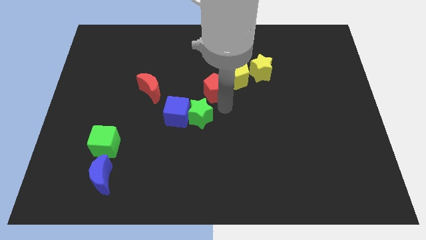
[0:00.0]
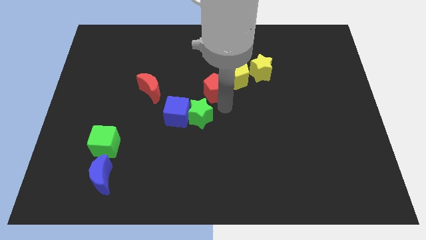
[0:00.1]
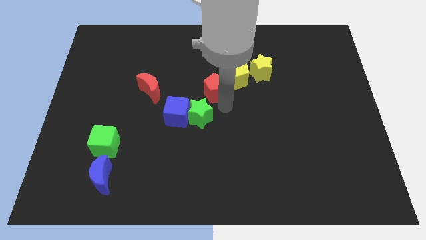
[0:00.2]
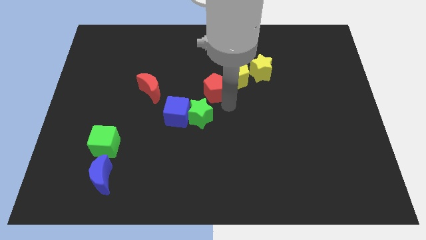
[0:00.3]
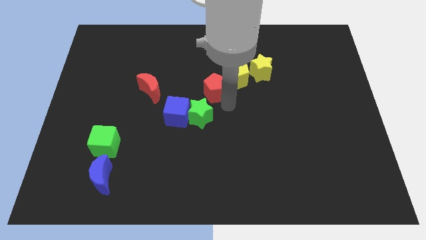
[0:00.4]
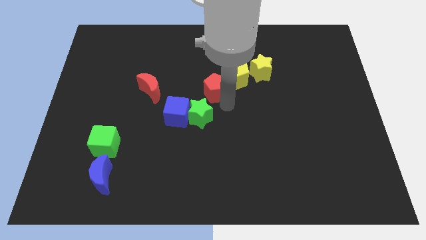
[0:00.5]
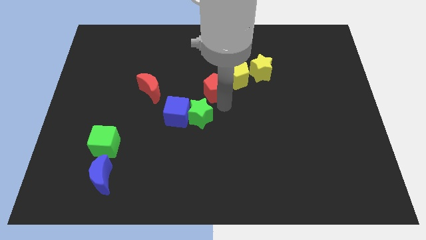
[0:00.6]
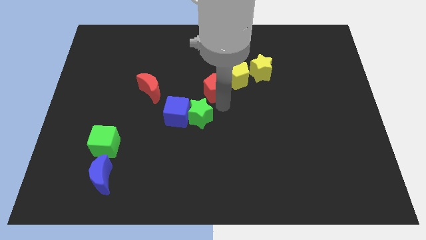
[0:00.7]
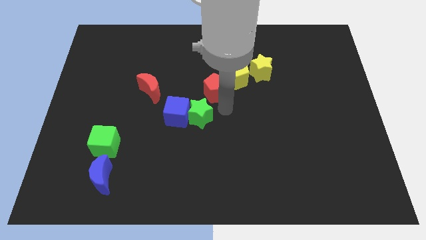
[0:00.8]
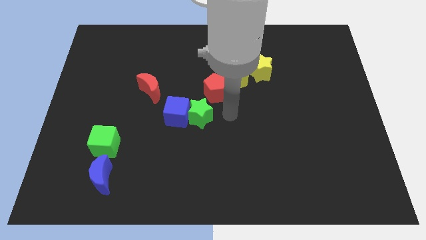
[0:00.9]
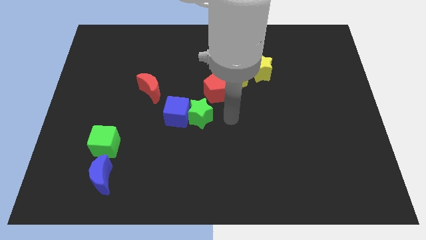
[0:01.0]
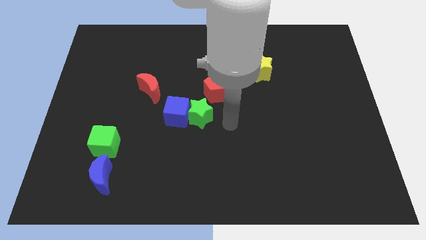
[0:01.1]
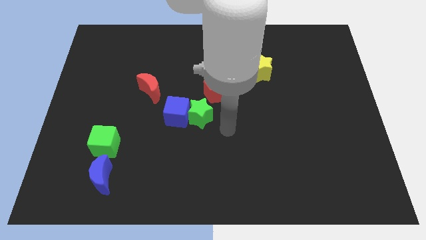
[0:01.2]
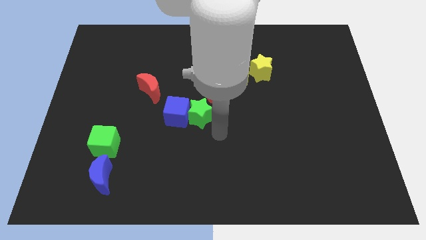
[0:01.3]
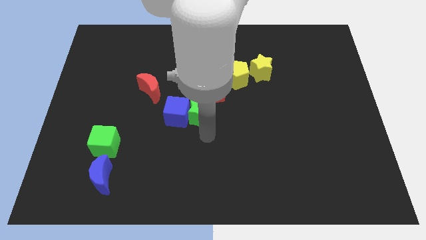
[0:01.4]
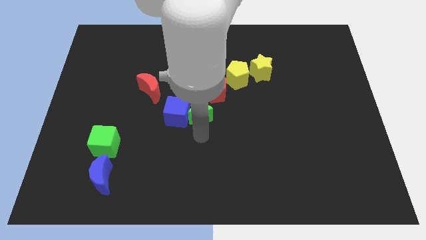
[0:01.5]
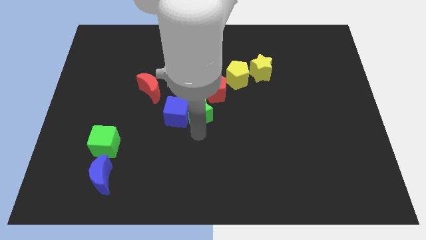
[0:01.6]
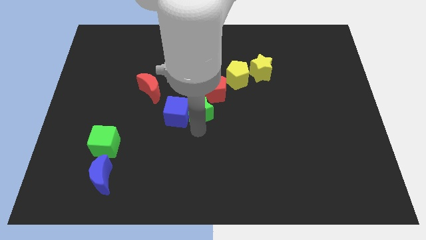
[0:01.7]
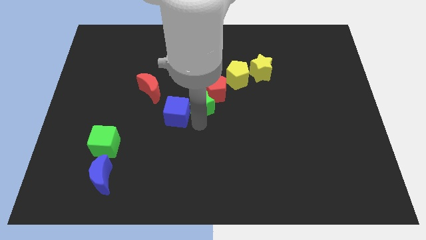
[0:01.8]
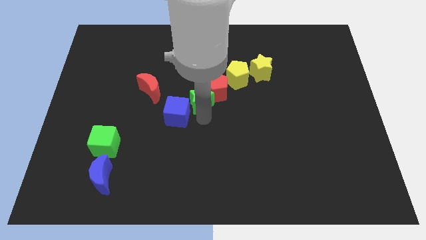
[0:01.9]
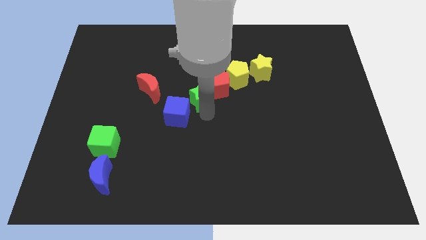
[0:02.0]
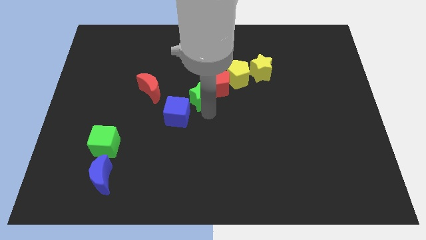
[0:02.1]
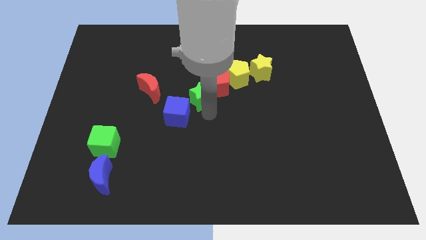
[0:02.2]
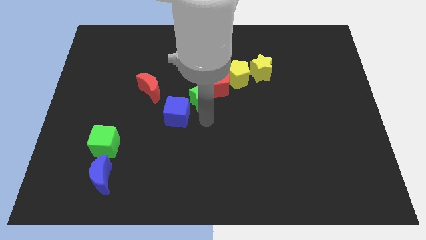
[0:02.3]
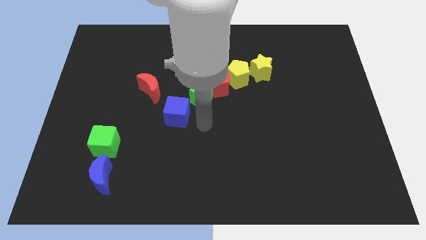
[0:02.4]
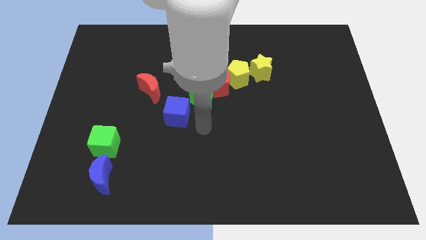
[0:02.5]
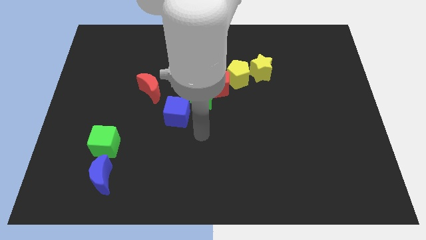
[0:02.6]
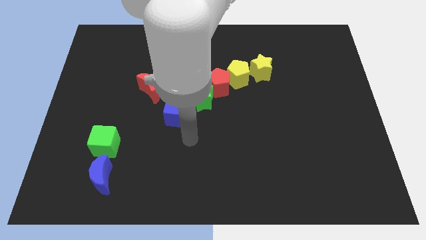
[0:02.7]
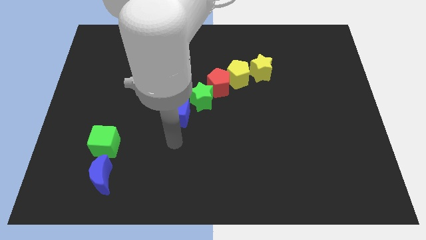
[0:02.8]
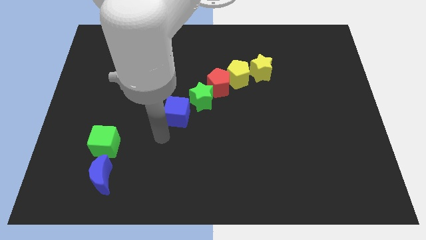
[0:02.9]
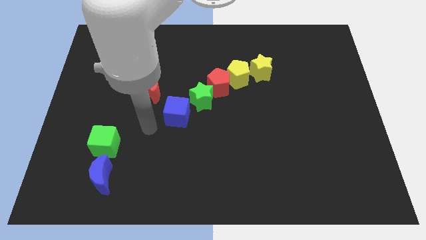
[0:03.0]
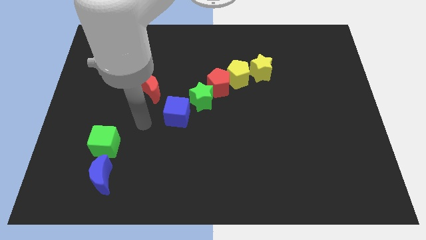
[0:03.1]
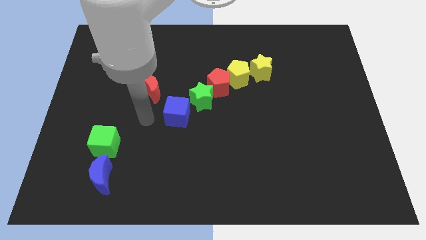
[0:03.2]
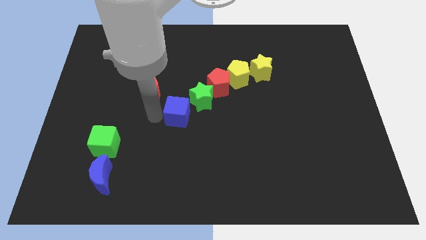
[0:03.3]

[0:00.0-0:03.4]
move the green star between blue cube and red pentagon

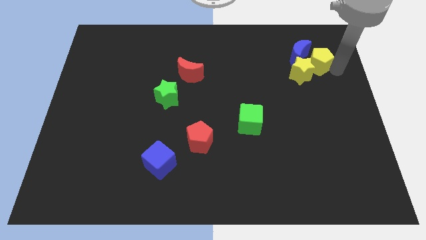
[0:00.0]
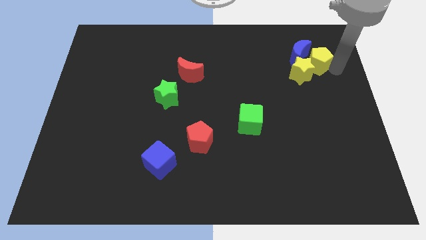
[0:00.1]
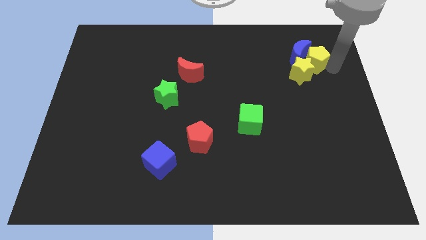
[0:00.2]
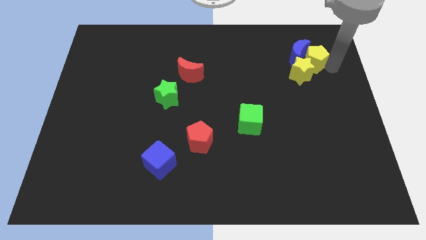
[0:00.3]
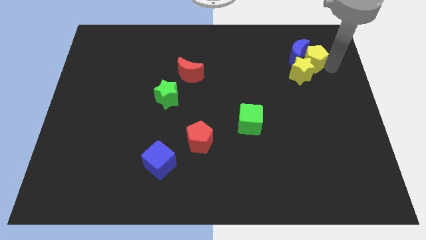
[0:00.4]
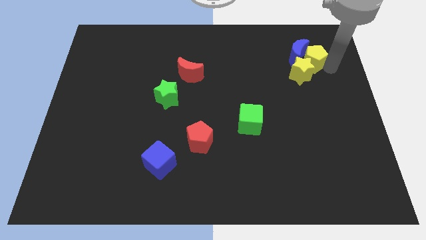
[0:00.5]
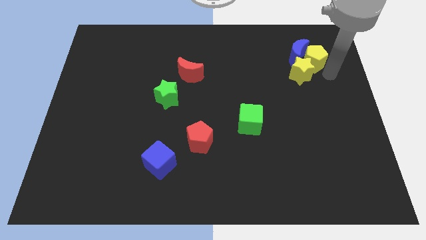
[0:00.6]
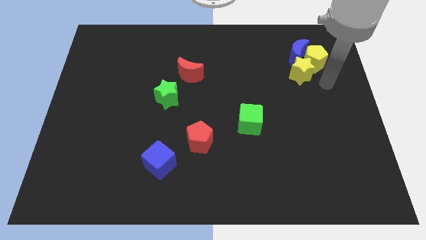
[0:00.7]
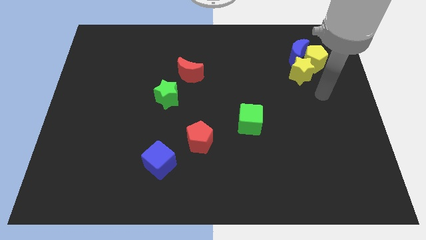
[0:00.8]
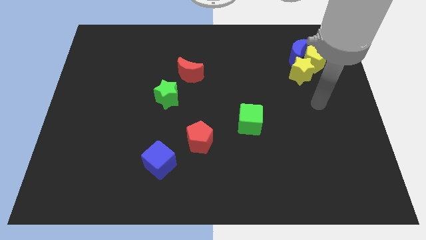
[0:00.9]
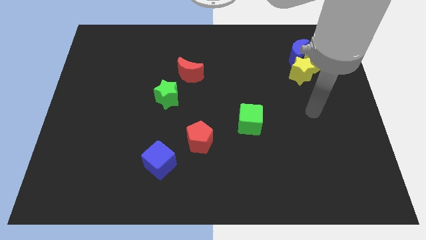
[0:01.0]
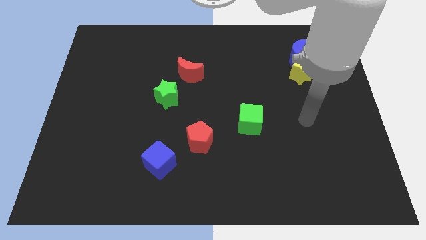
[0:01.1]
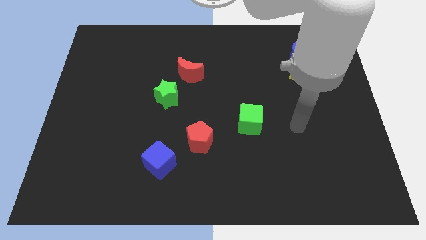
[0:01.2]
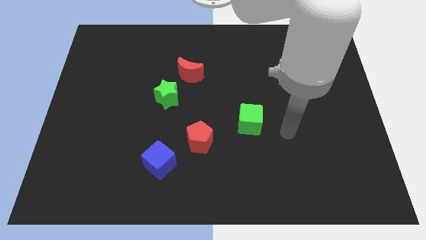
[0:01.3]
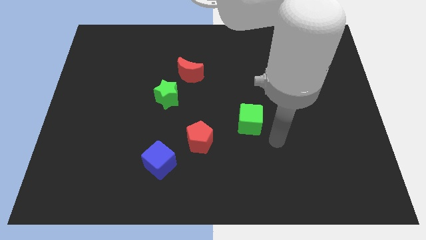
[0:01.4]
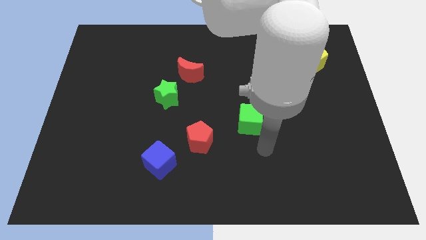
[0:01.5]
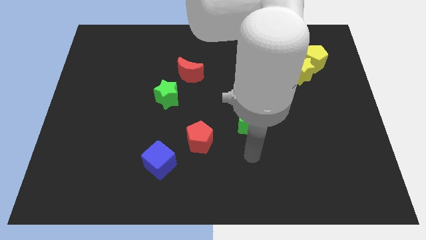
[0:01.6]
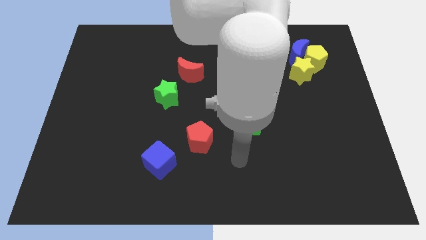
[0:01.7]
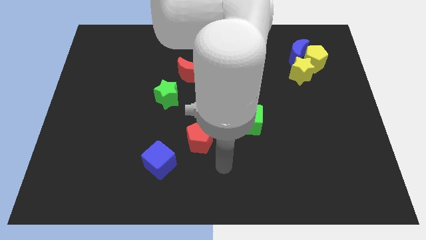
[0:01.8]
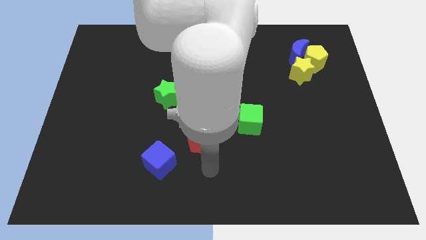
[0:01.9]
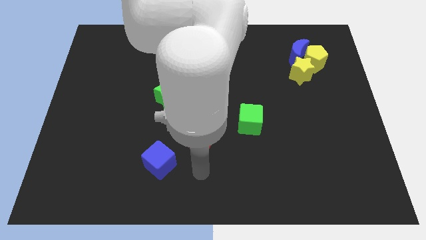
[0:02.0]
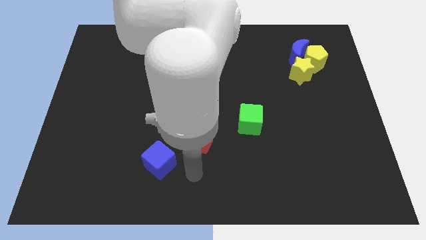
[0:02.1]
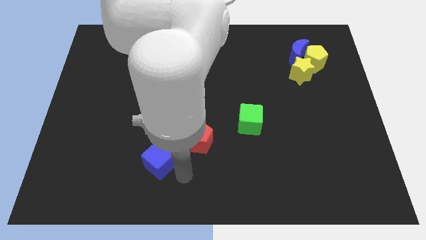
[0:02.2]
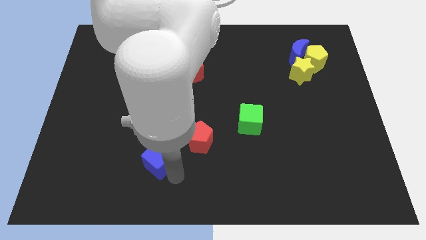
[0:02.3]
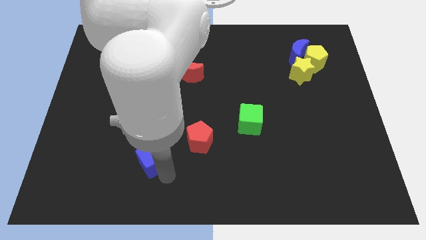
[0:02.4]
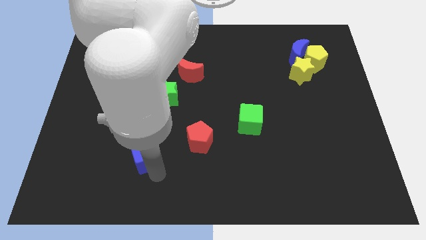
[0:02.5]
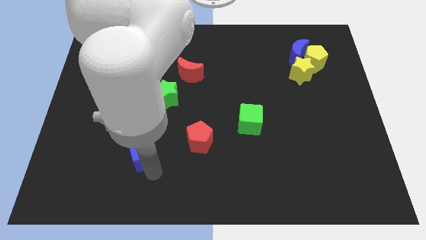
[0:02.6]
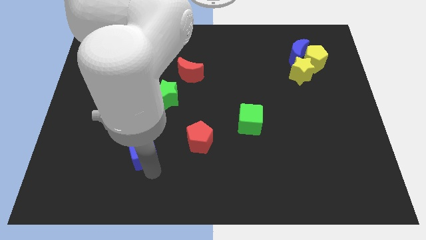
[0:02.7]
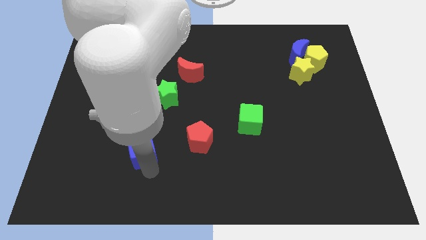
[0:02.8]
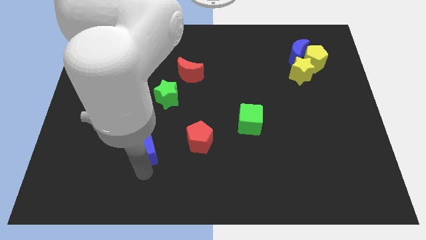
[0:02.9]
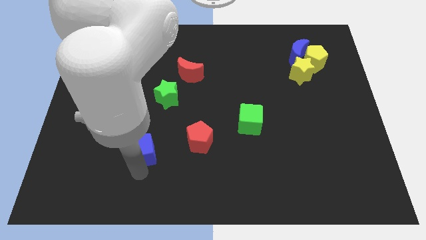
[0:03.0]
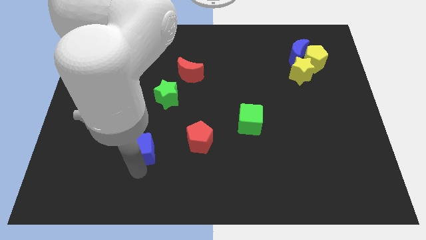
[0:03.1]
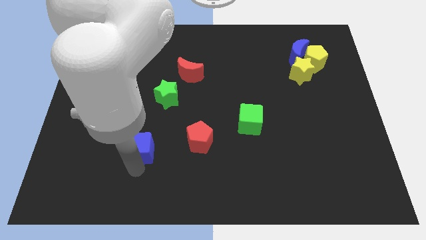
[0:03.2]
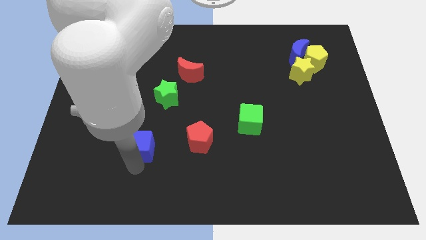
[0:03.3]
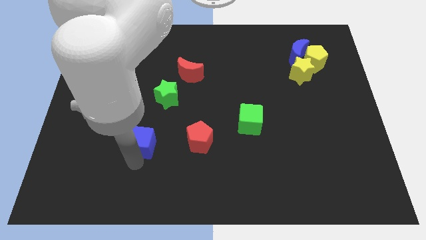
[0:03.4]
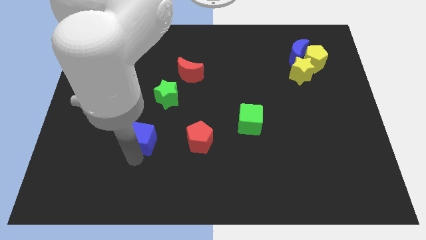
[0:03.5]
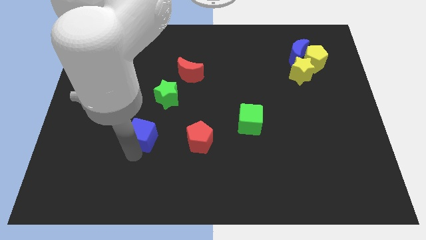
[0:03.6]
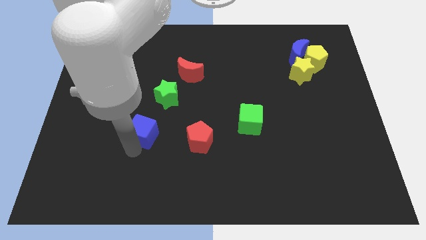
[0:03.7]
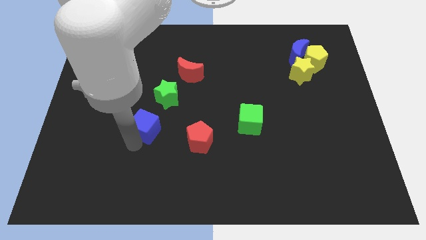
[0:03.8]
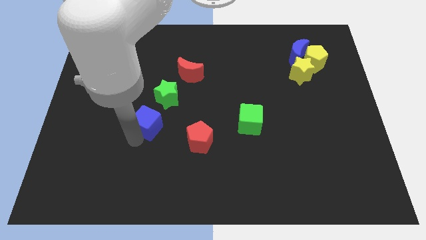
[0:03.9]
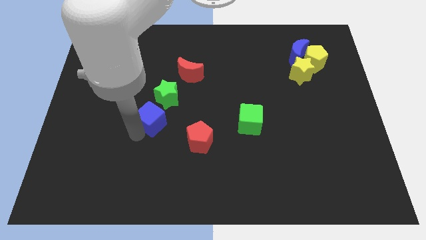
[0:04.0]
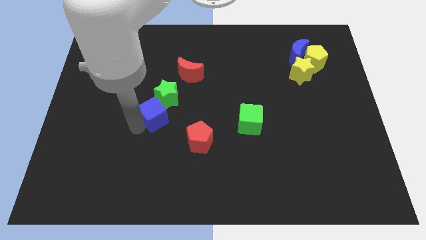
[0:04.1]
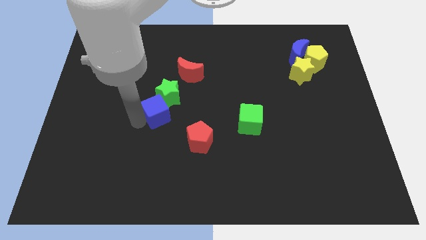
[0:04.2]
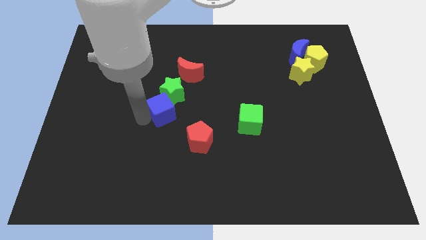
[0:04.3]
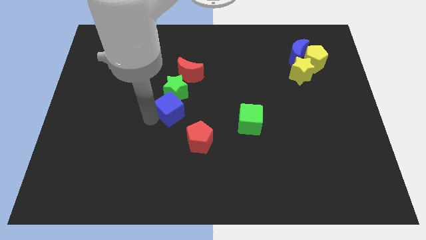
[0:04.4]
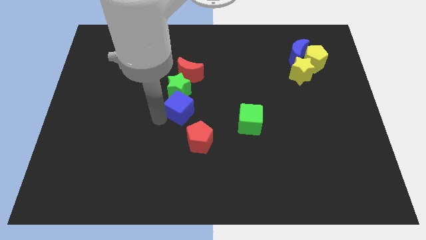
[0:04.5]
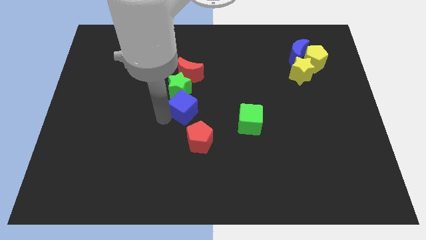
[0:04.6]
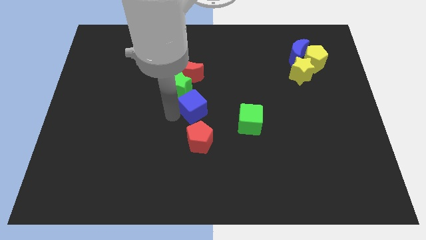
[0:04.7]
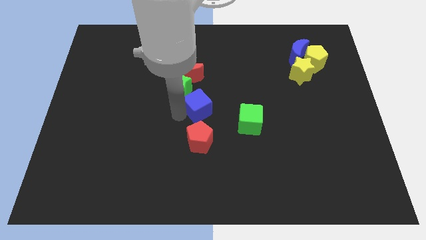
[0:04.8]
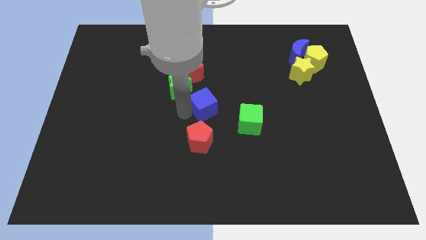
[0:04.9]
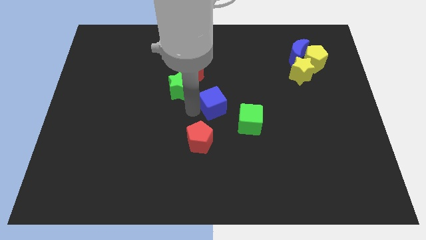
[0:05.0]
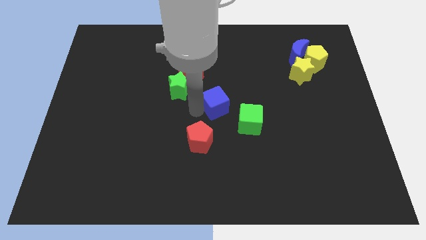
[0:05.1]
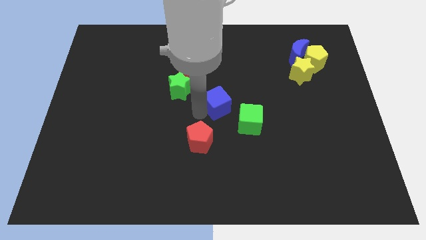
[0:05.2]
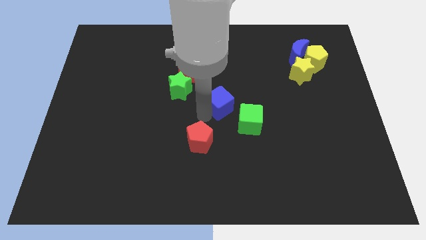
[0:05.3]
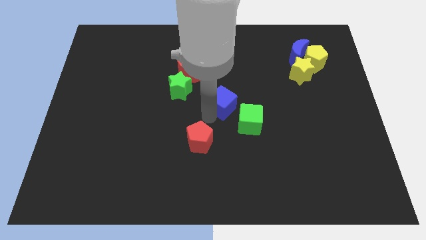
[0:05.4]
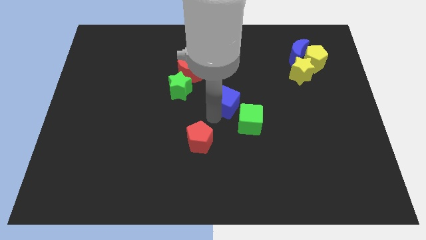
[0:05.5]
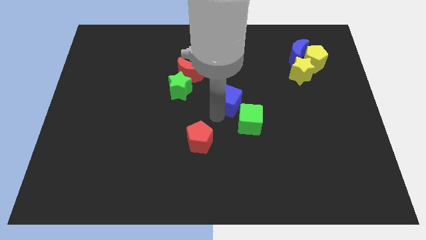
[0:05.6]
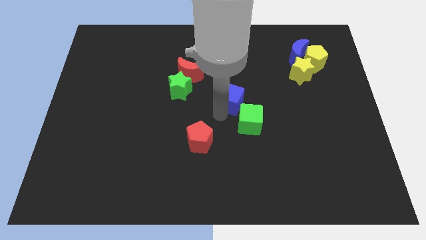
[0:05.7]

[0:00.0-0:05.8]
move blue cube on the top left side of the green cube
